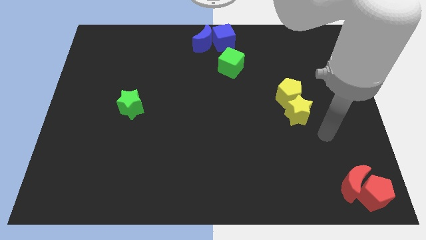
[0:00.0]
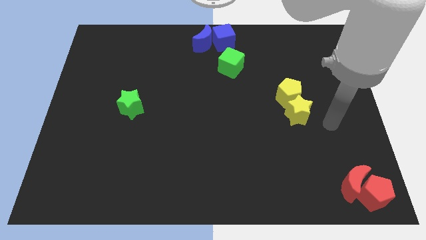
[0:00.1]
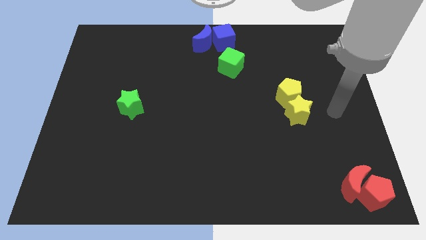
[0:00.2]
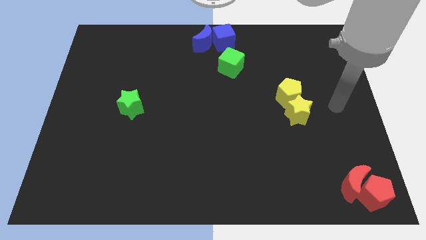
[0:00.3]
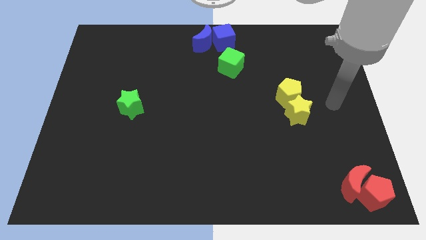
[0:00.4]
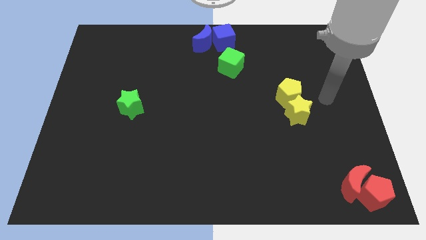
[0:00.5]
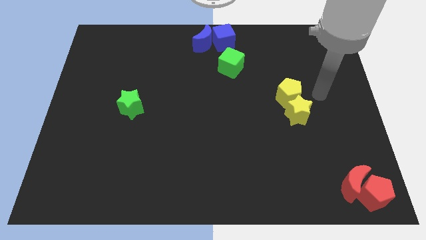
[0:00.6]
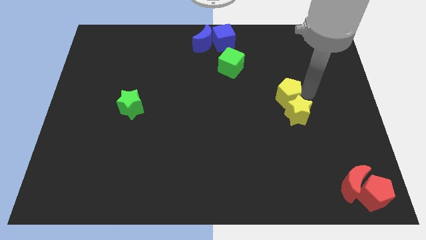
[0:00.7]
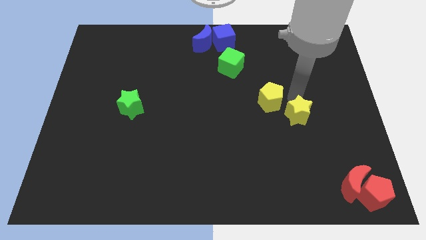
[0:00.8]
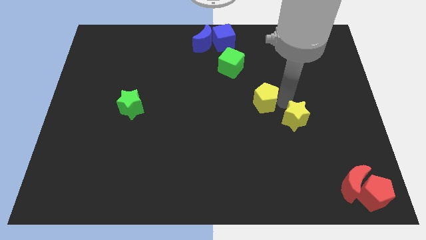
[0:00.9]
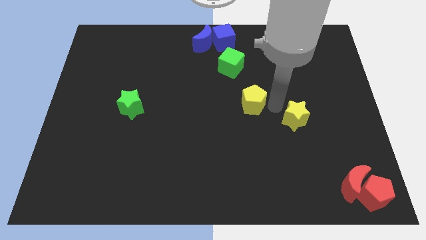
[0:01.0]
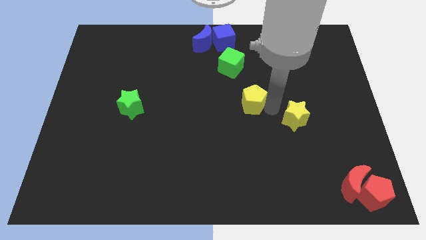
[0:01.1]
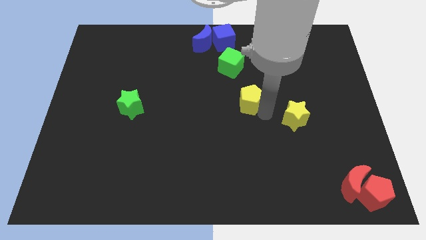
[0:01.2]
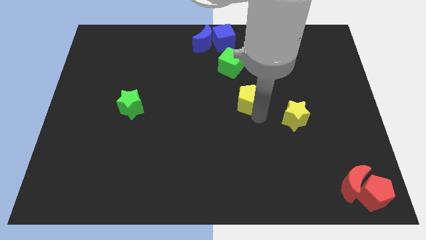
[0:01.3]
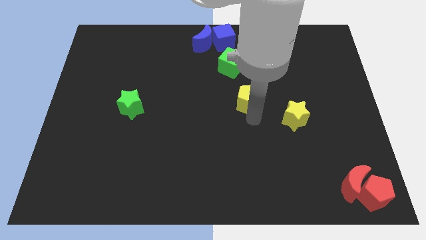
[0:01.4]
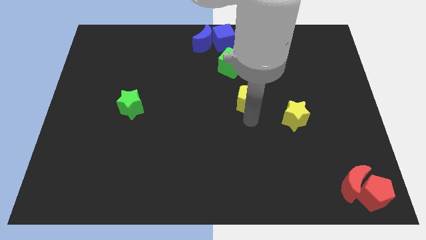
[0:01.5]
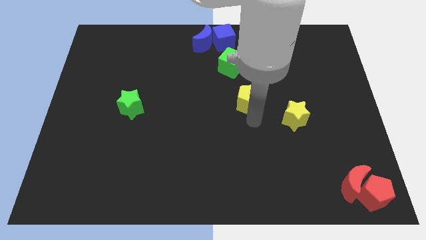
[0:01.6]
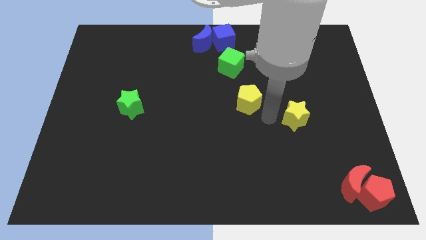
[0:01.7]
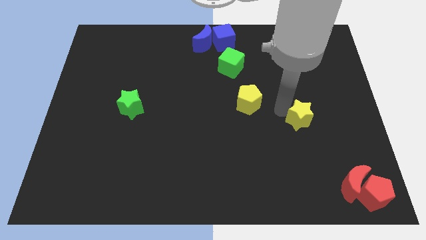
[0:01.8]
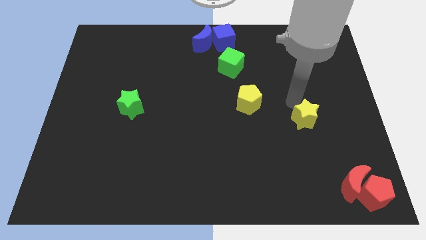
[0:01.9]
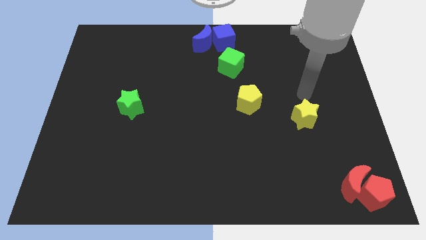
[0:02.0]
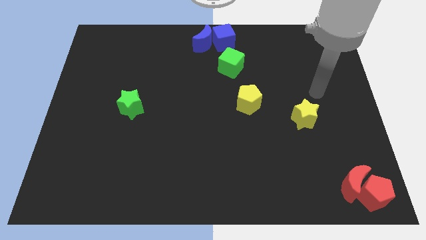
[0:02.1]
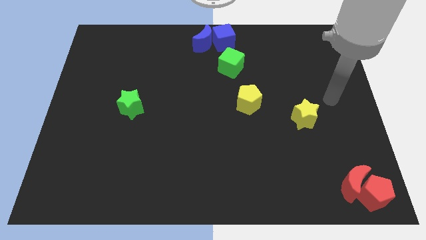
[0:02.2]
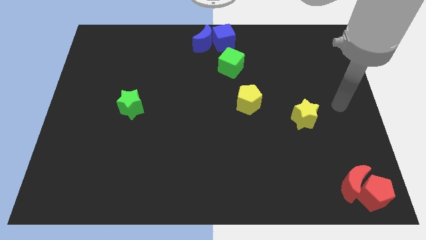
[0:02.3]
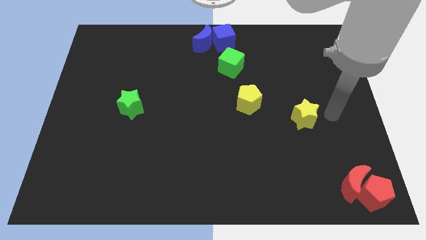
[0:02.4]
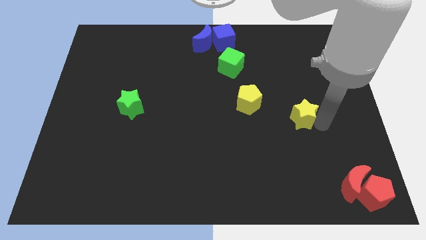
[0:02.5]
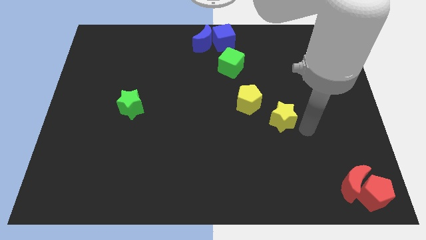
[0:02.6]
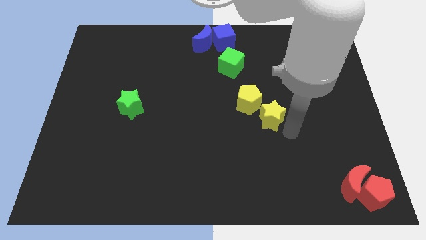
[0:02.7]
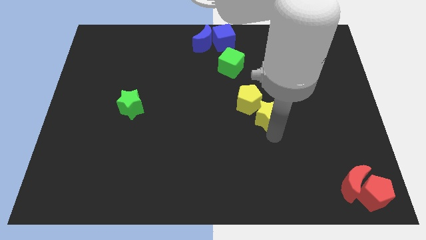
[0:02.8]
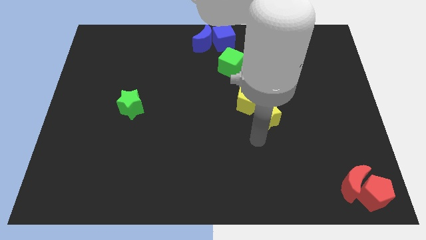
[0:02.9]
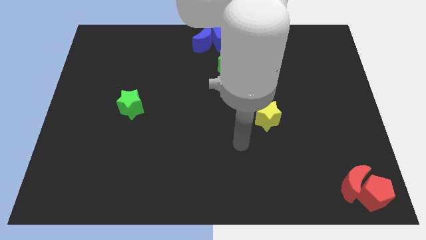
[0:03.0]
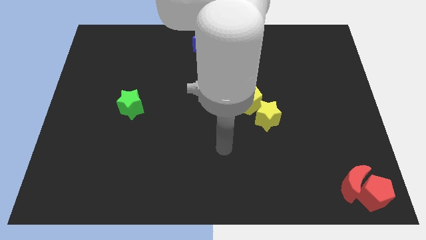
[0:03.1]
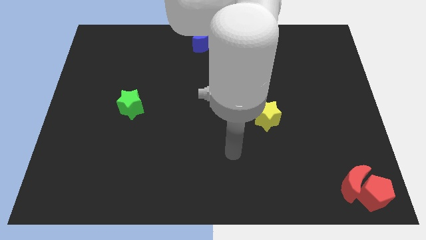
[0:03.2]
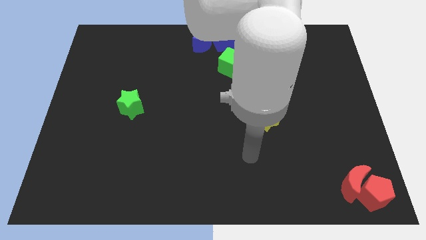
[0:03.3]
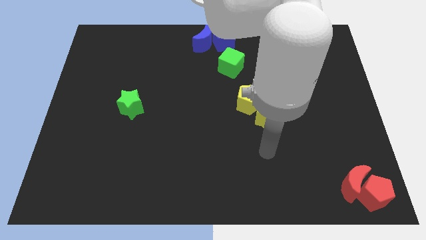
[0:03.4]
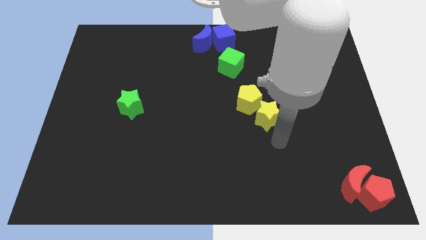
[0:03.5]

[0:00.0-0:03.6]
place the yellow pentagon and yellow star diagonally on the bottom right side of the green cube

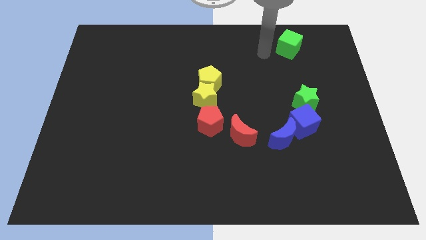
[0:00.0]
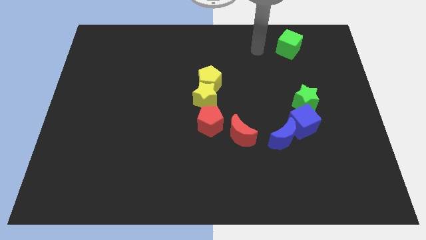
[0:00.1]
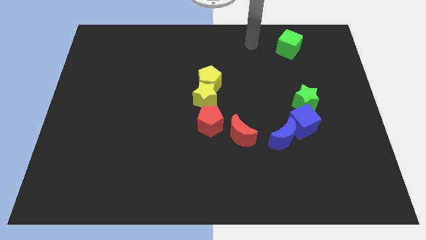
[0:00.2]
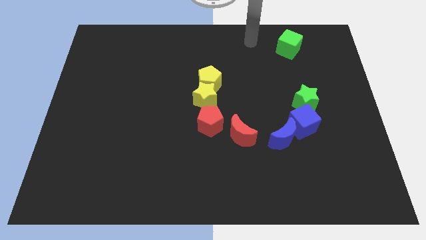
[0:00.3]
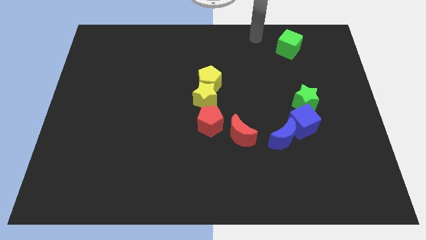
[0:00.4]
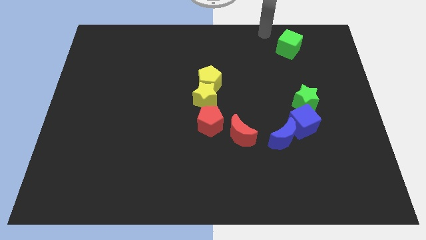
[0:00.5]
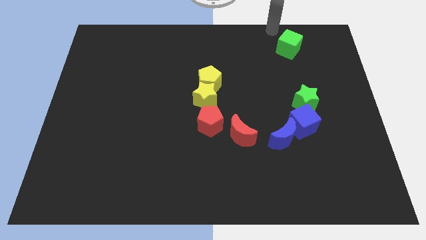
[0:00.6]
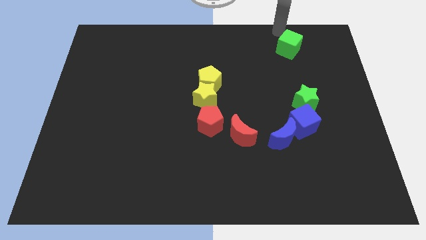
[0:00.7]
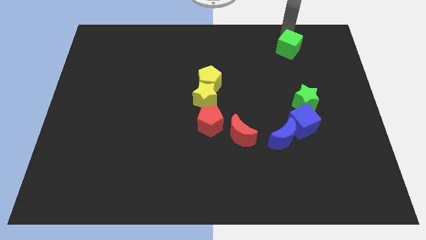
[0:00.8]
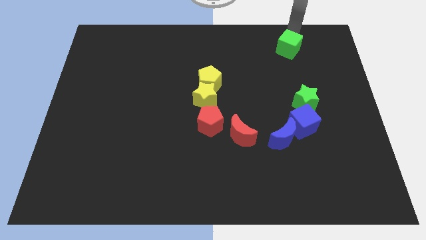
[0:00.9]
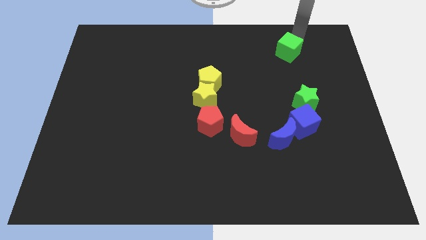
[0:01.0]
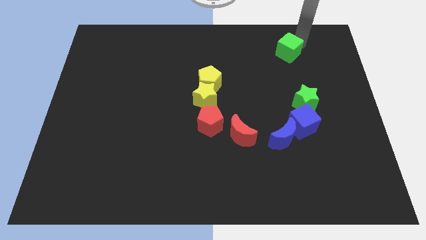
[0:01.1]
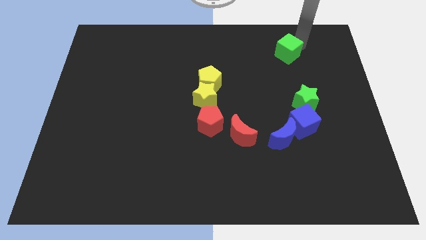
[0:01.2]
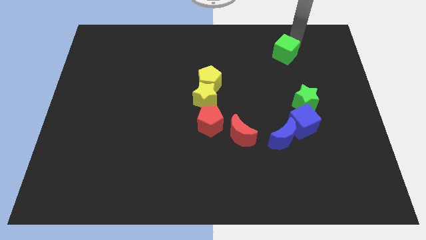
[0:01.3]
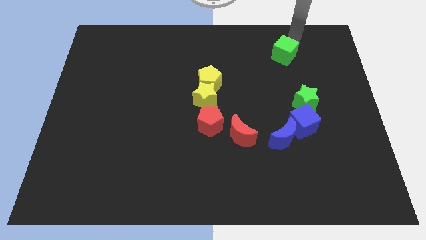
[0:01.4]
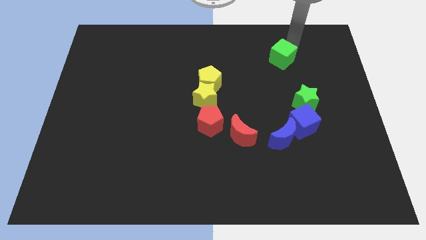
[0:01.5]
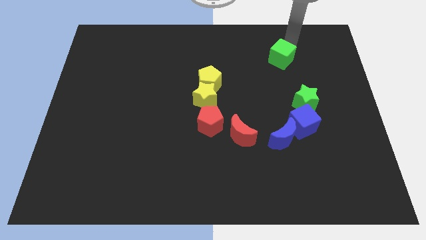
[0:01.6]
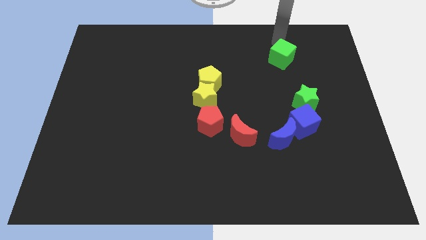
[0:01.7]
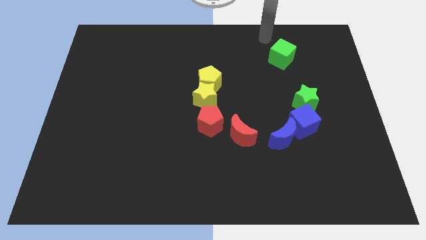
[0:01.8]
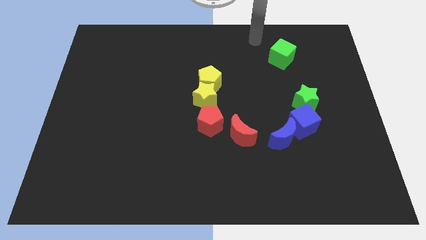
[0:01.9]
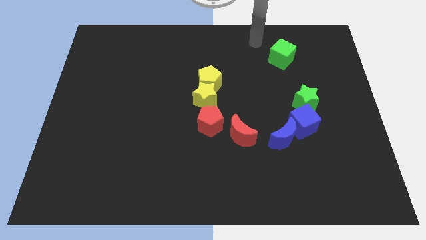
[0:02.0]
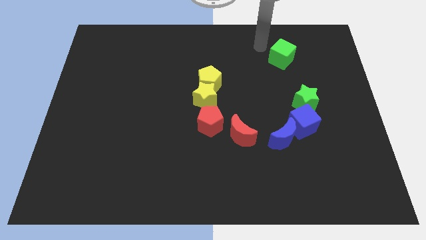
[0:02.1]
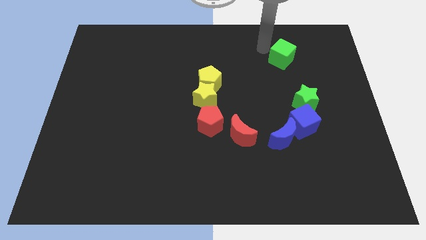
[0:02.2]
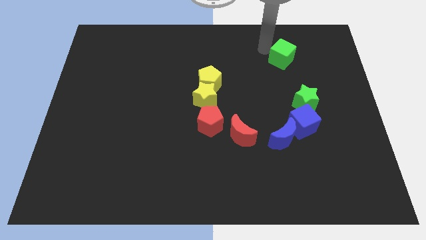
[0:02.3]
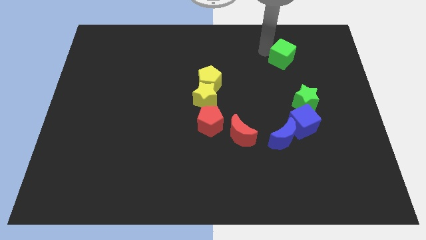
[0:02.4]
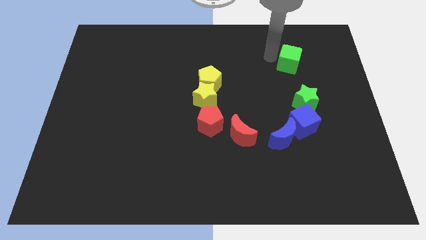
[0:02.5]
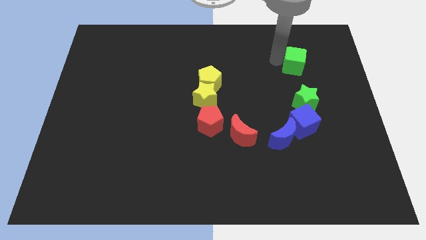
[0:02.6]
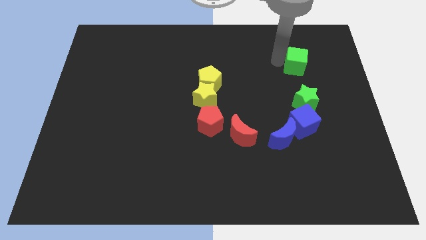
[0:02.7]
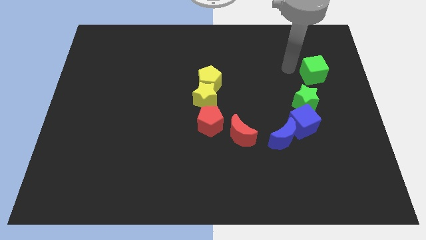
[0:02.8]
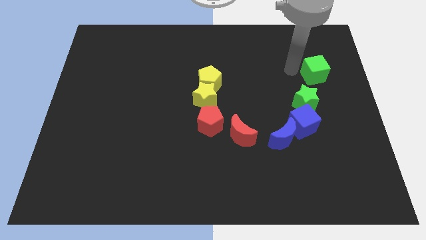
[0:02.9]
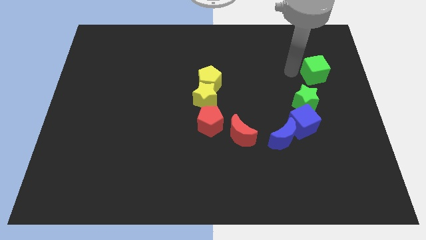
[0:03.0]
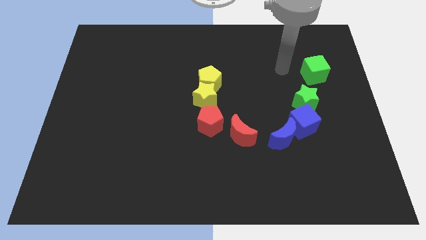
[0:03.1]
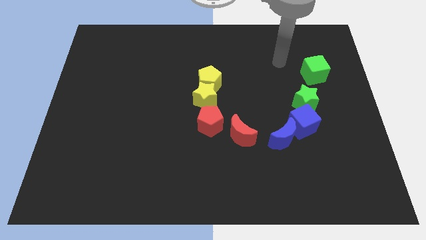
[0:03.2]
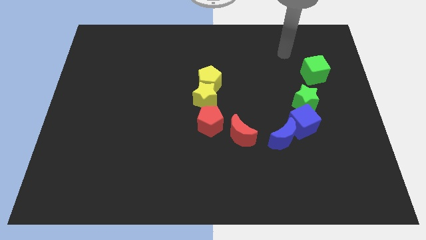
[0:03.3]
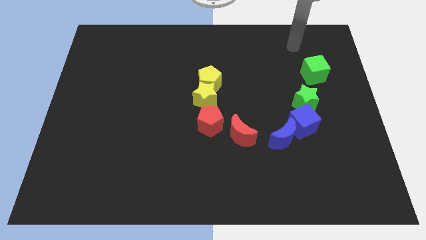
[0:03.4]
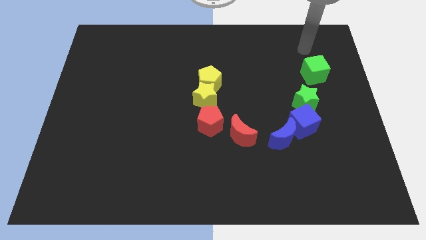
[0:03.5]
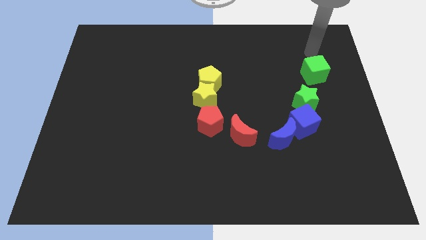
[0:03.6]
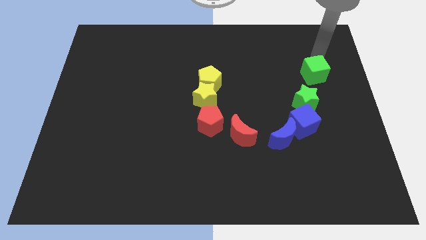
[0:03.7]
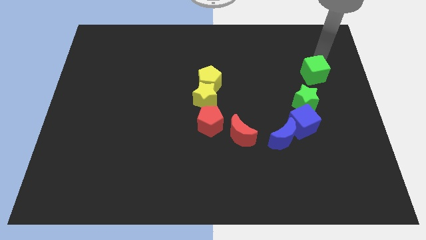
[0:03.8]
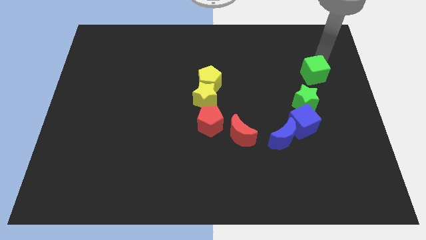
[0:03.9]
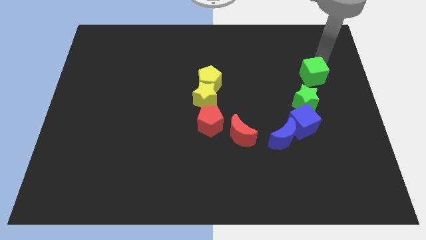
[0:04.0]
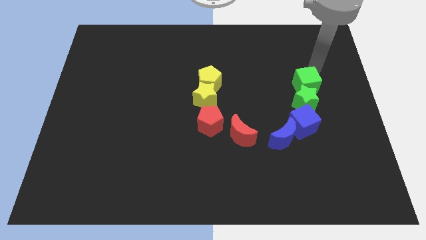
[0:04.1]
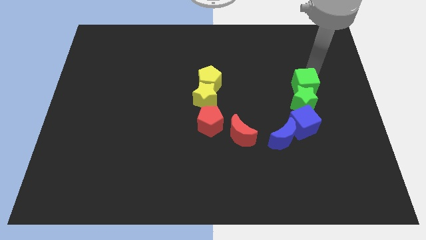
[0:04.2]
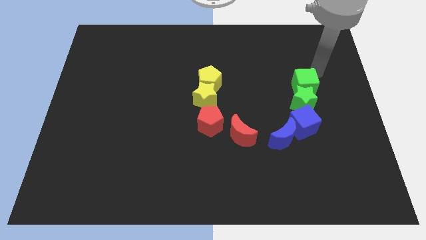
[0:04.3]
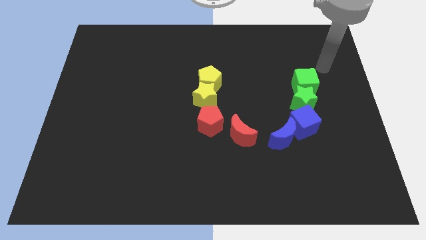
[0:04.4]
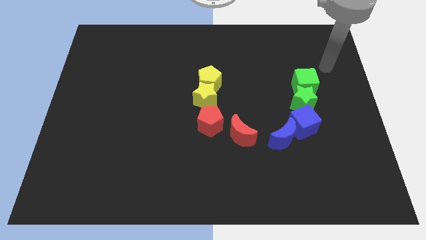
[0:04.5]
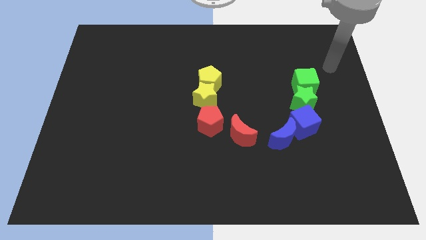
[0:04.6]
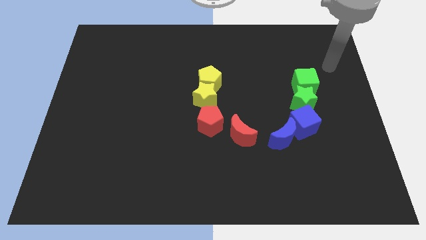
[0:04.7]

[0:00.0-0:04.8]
move the green cube to the top right side of the green star

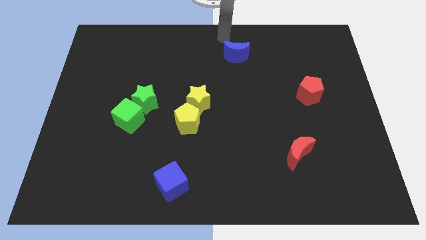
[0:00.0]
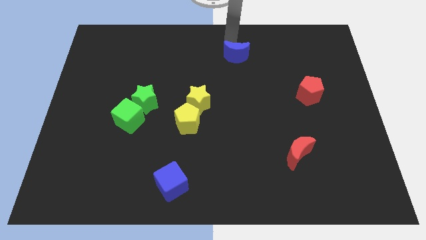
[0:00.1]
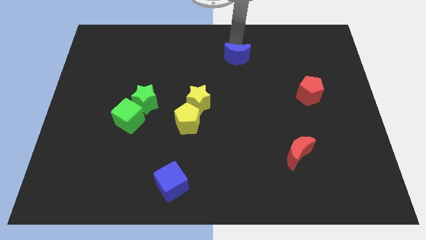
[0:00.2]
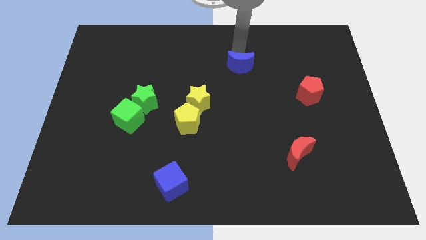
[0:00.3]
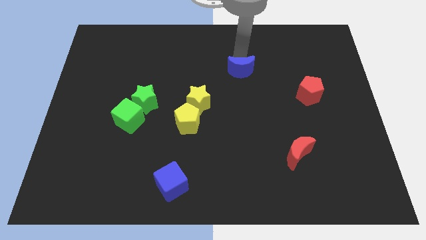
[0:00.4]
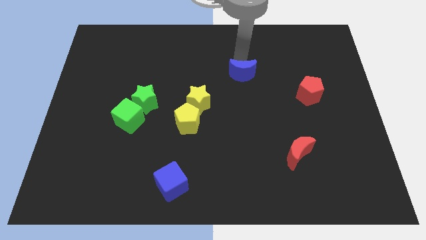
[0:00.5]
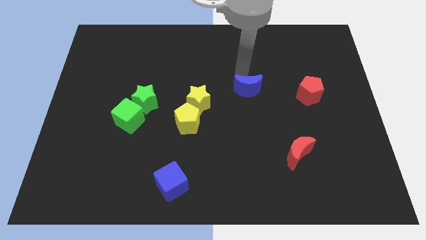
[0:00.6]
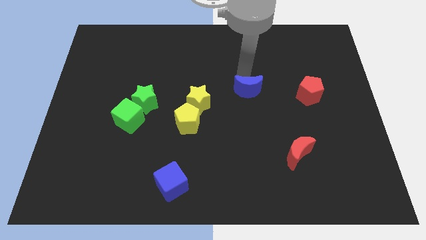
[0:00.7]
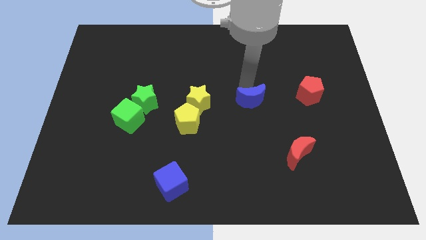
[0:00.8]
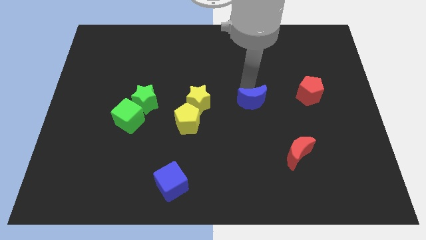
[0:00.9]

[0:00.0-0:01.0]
move the blue crescent parallel to the right side of the yellow star
